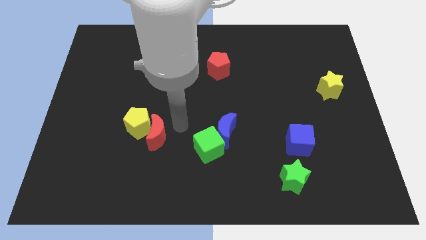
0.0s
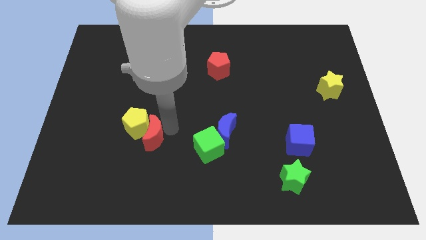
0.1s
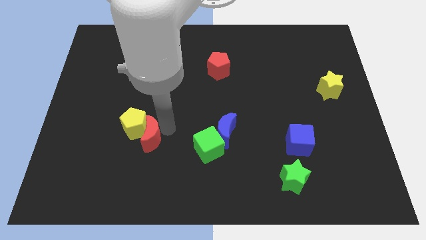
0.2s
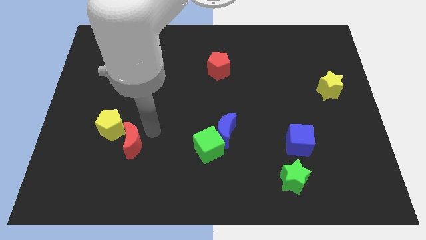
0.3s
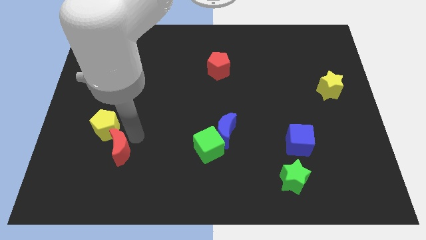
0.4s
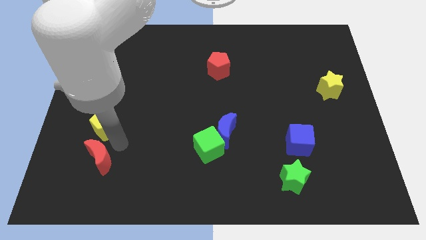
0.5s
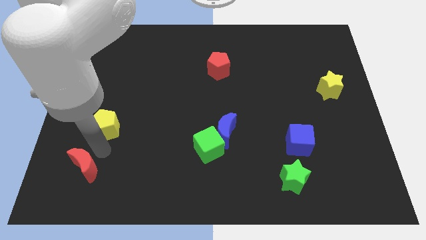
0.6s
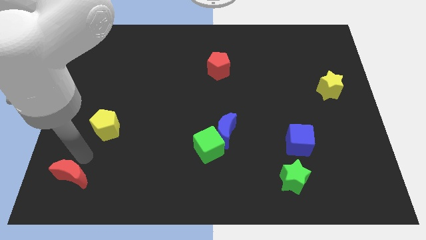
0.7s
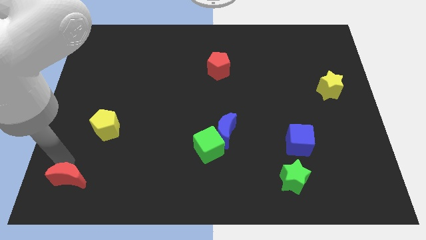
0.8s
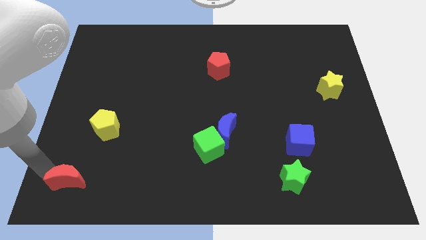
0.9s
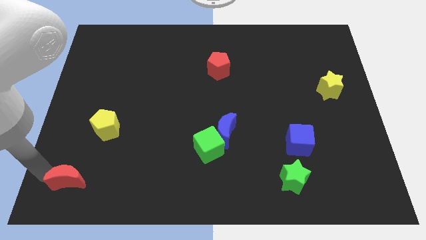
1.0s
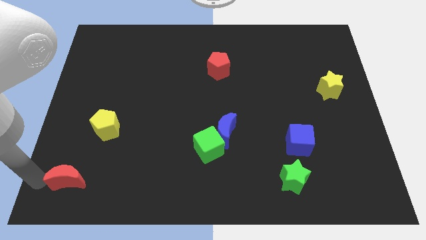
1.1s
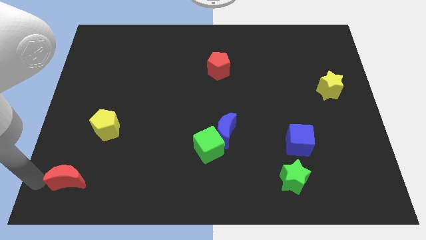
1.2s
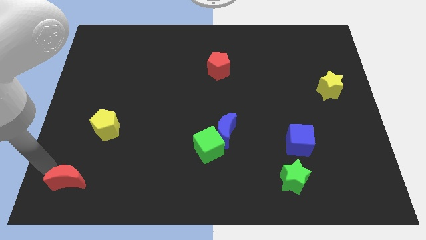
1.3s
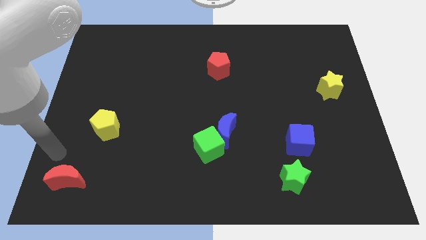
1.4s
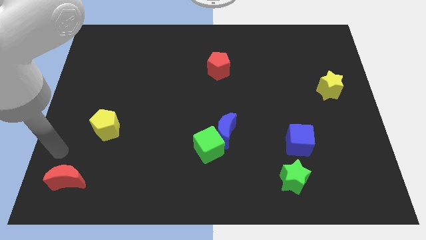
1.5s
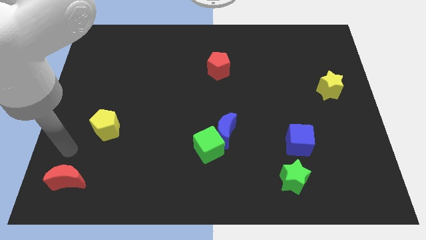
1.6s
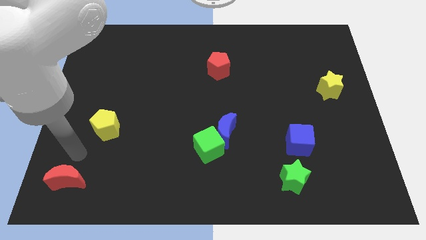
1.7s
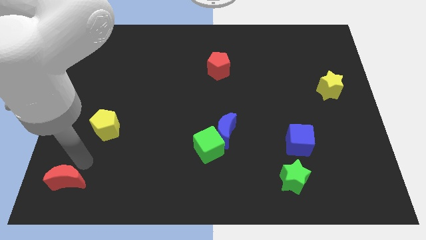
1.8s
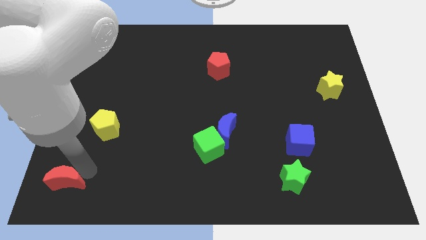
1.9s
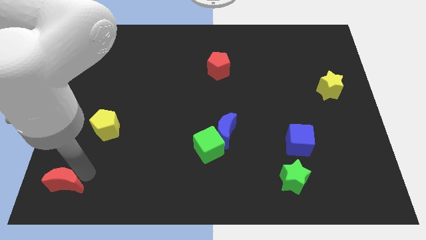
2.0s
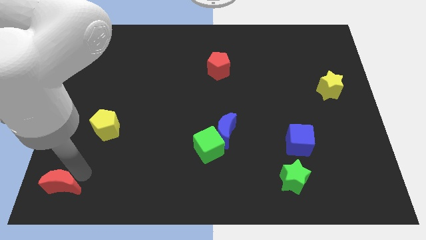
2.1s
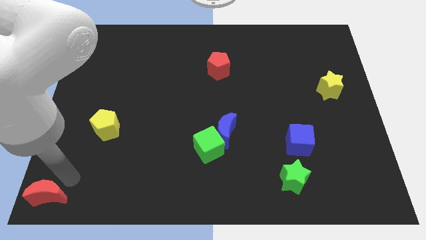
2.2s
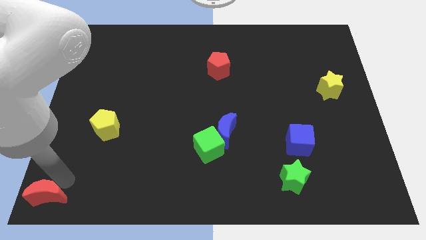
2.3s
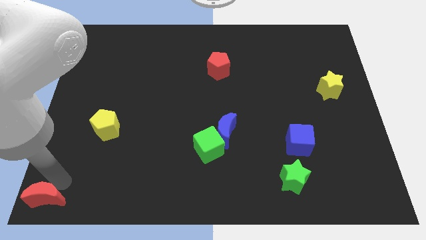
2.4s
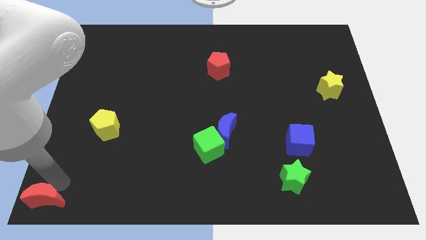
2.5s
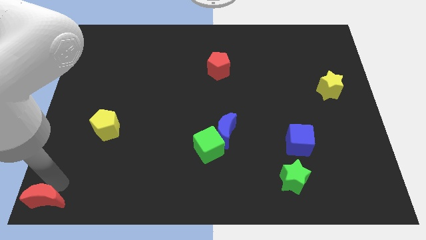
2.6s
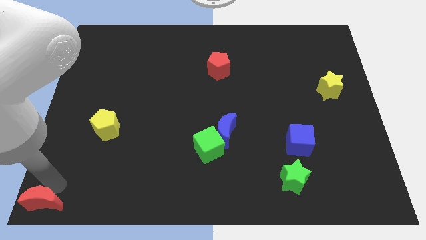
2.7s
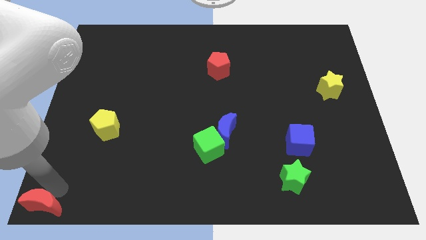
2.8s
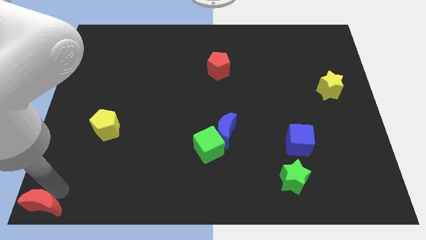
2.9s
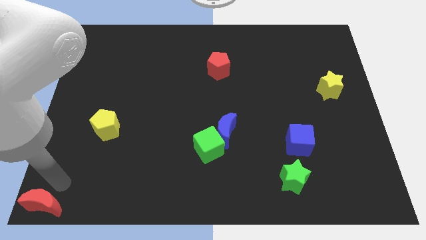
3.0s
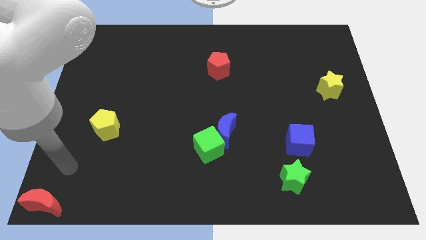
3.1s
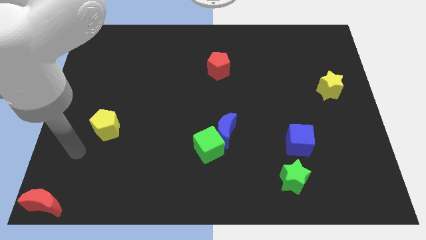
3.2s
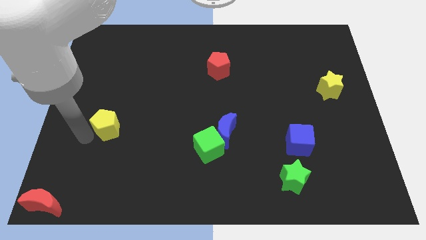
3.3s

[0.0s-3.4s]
put the red crescent at the bottom left corner

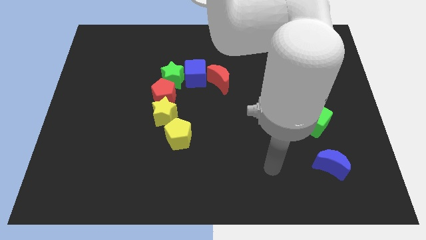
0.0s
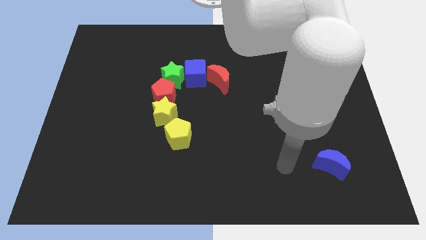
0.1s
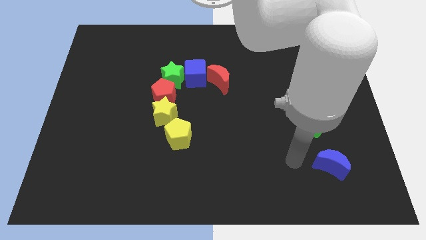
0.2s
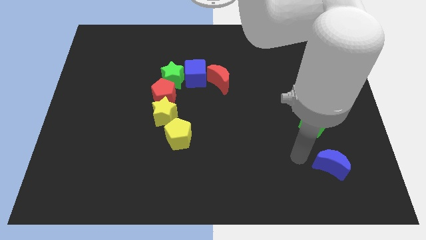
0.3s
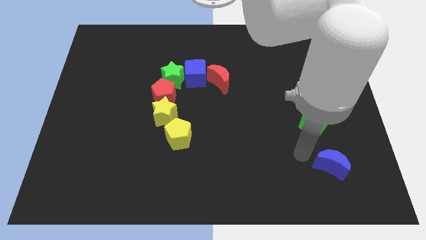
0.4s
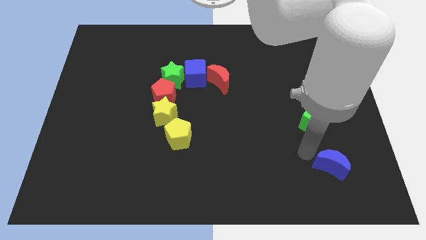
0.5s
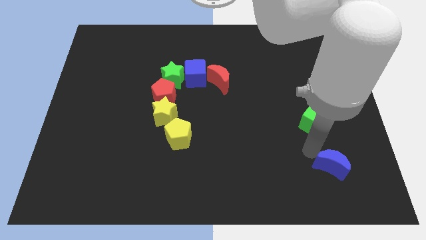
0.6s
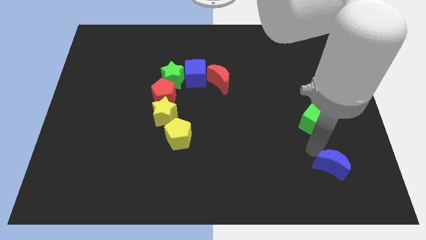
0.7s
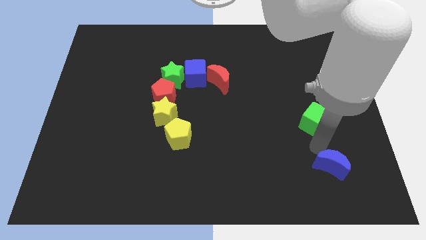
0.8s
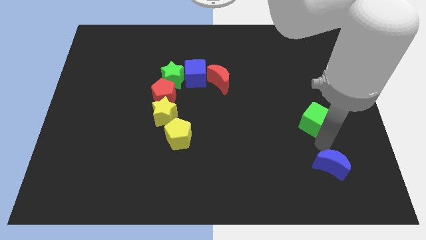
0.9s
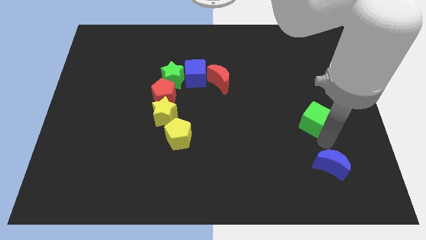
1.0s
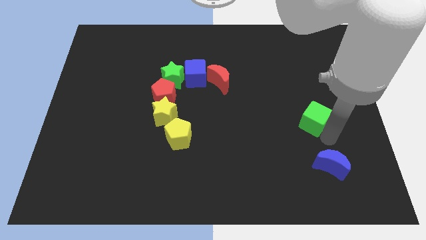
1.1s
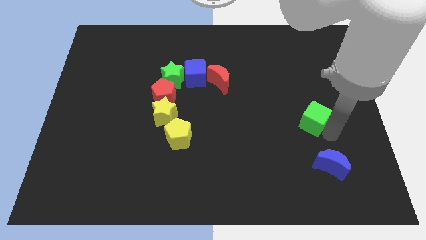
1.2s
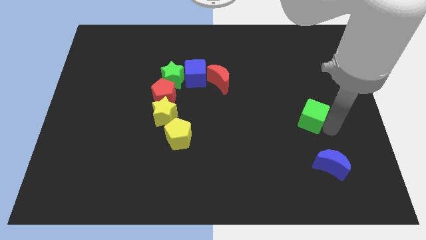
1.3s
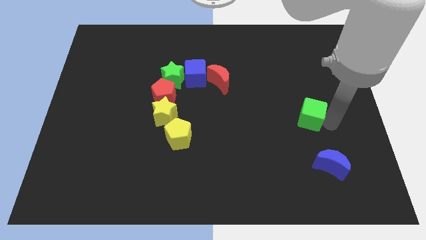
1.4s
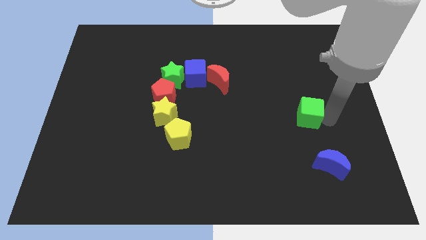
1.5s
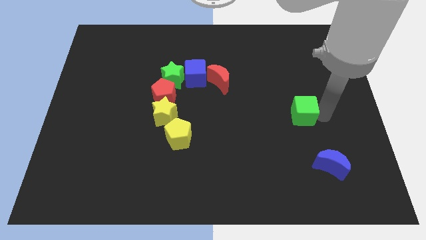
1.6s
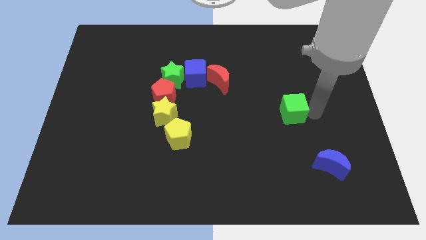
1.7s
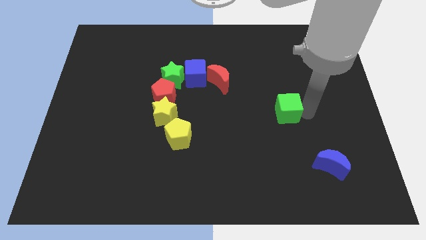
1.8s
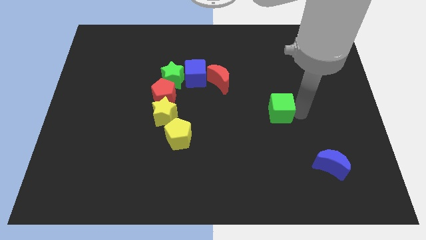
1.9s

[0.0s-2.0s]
slightly push the green cube towards the center of board

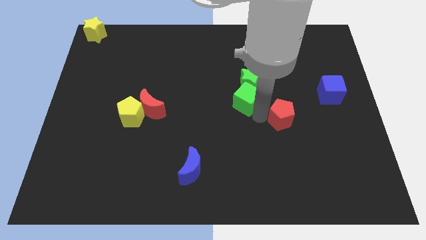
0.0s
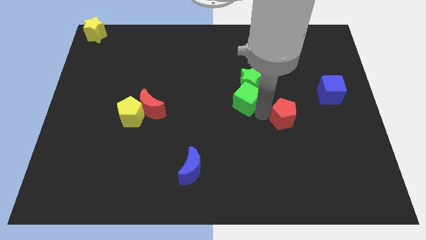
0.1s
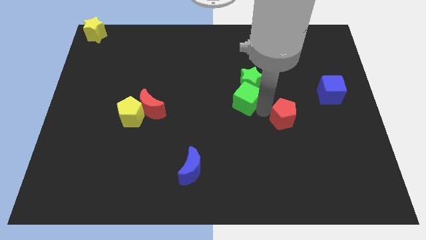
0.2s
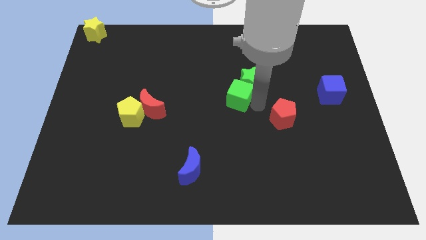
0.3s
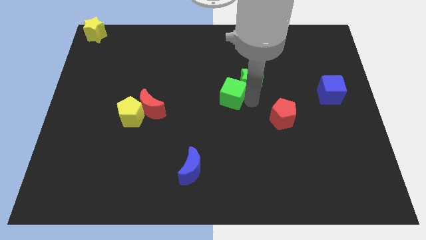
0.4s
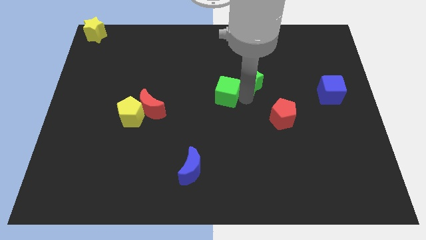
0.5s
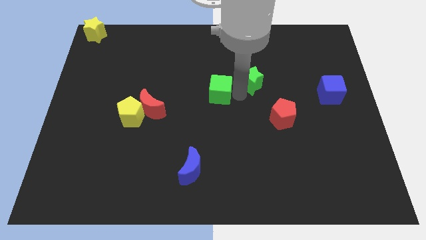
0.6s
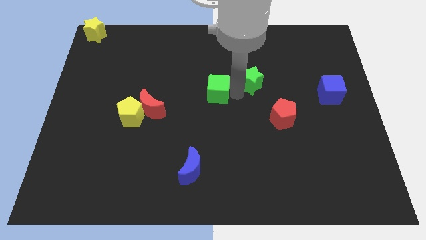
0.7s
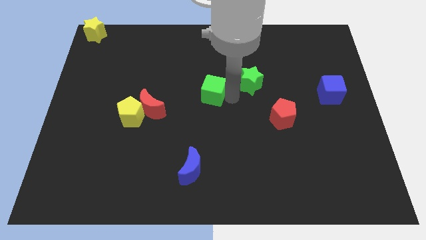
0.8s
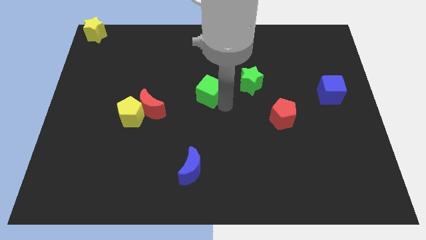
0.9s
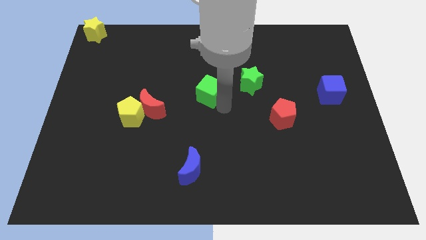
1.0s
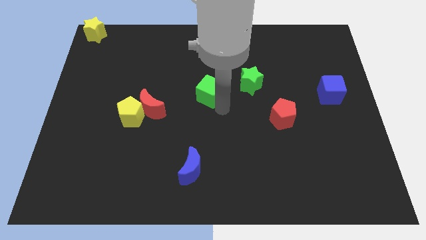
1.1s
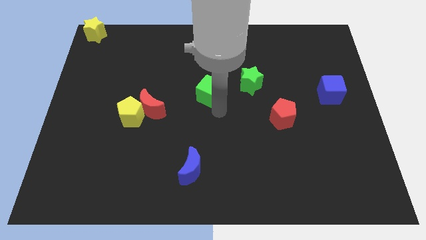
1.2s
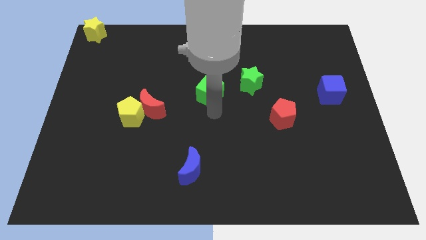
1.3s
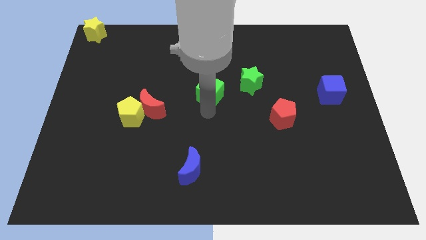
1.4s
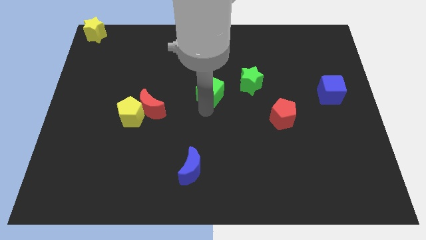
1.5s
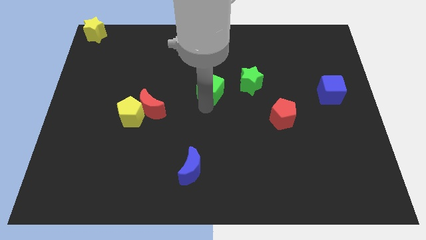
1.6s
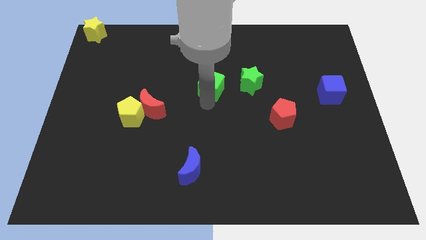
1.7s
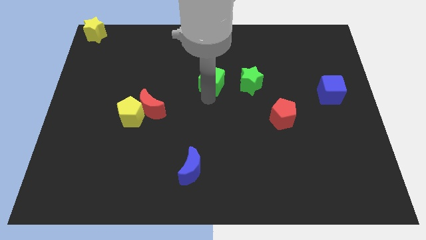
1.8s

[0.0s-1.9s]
move the green cube to the left side of the green star

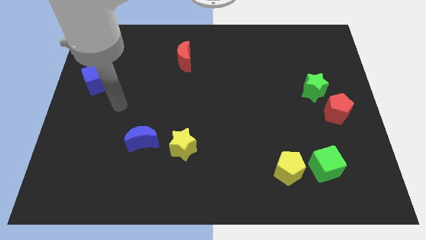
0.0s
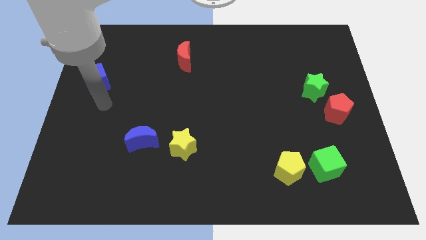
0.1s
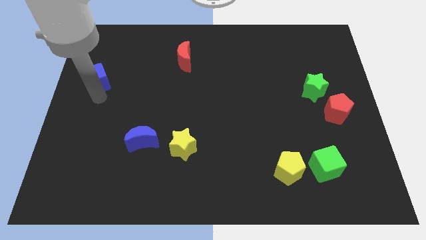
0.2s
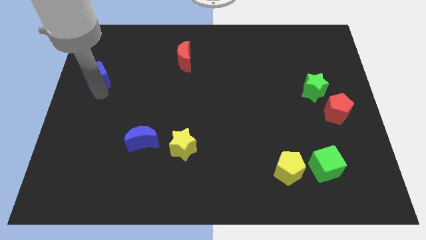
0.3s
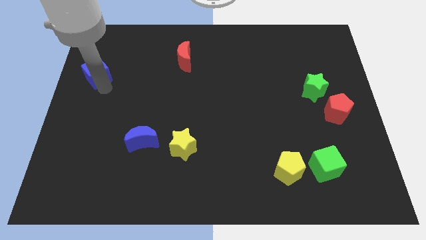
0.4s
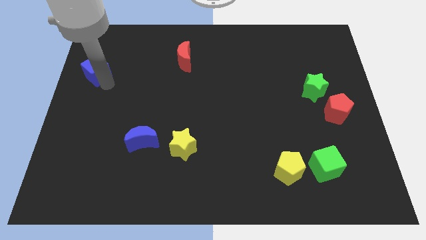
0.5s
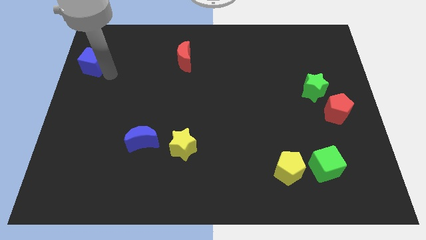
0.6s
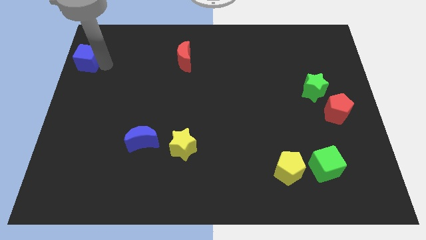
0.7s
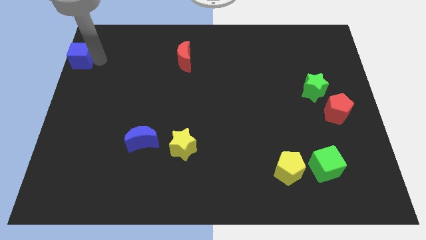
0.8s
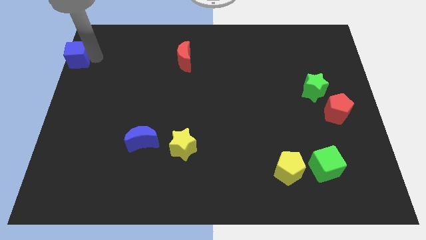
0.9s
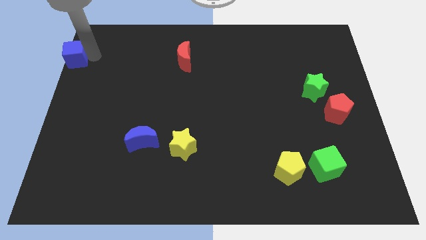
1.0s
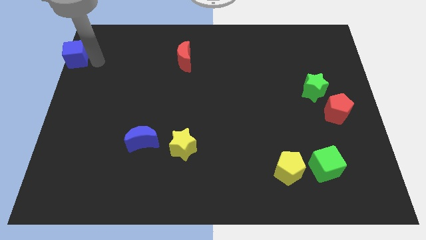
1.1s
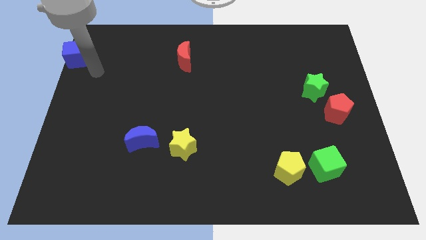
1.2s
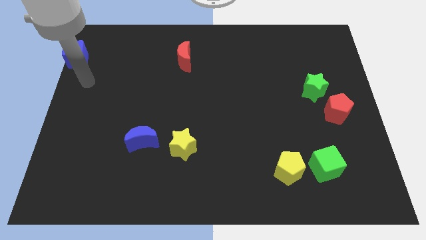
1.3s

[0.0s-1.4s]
move the blue cube towards the top left corner

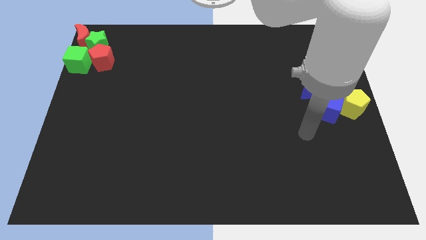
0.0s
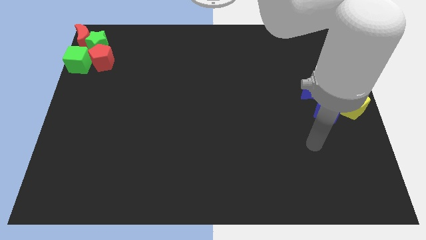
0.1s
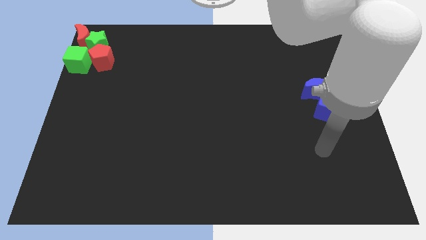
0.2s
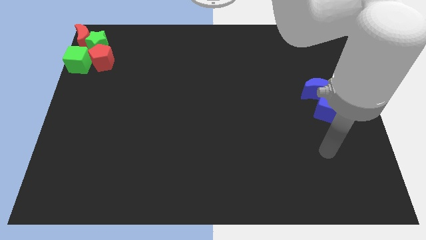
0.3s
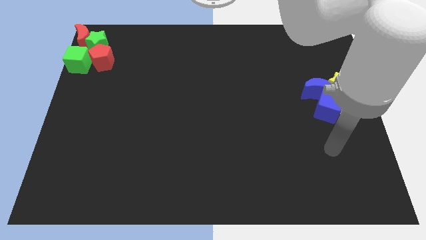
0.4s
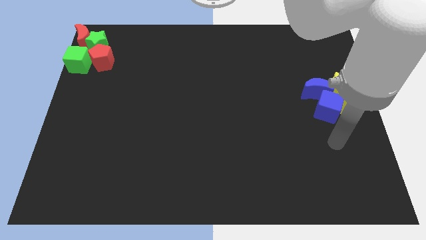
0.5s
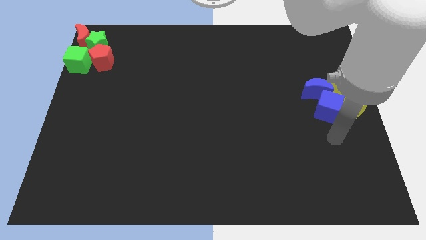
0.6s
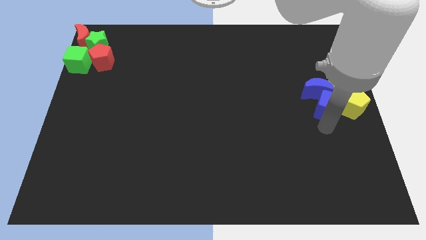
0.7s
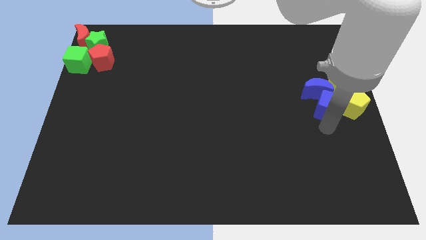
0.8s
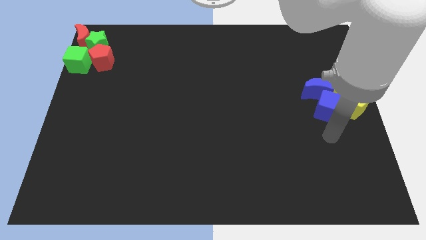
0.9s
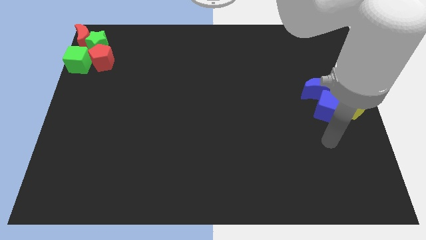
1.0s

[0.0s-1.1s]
place the arm down to the blue crescent
